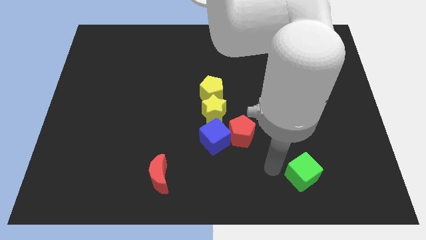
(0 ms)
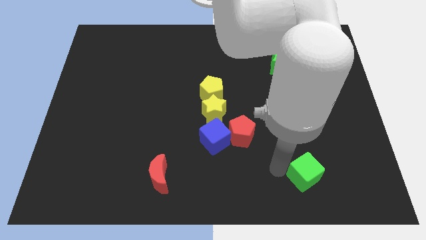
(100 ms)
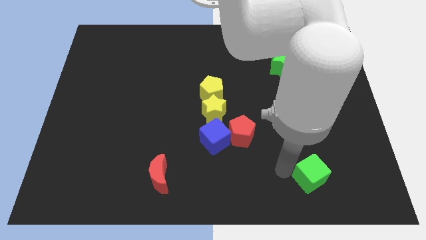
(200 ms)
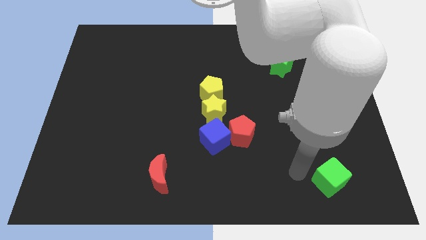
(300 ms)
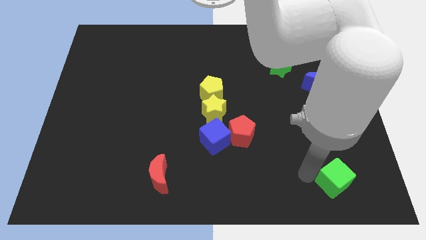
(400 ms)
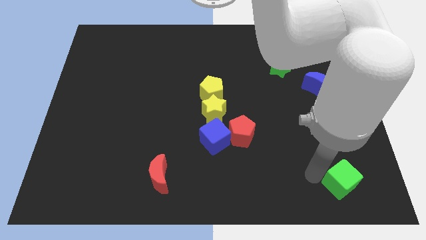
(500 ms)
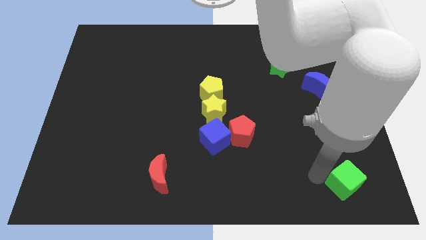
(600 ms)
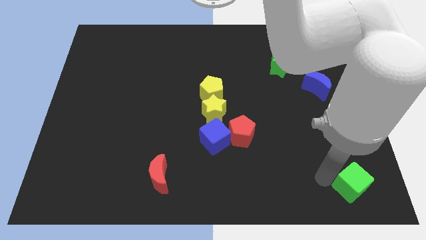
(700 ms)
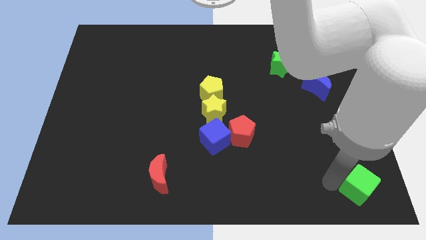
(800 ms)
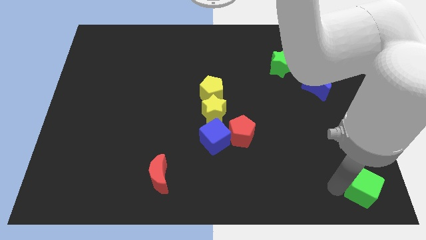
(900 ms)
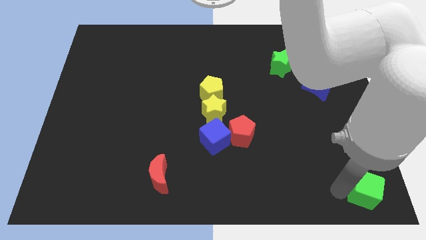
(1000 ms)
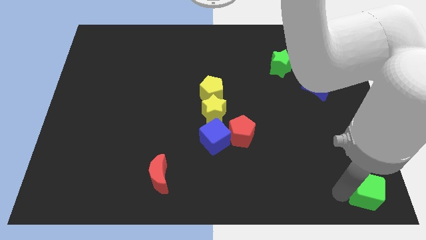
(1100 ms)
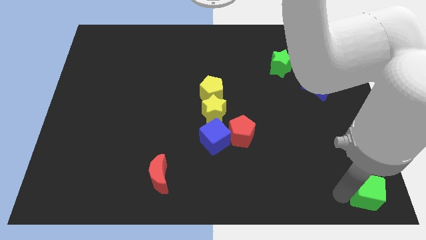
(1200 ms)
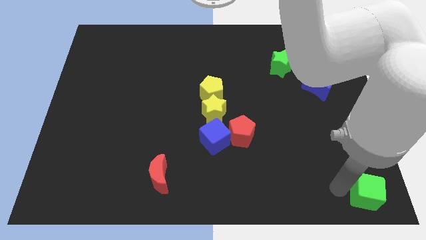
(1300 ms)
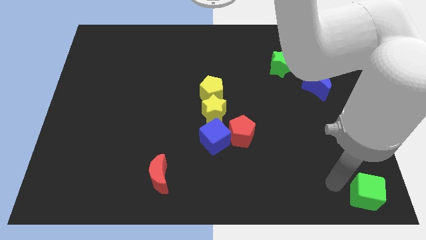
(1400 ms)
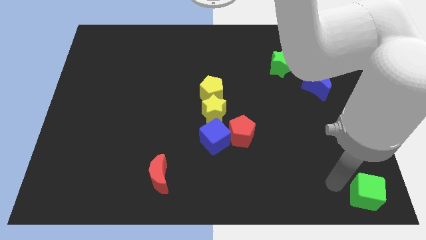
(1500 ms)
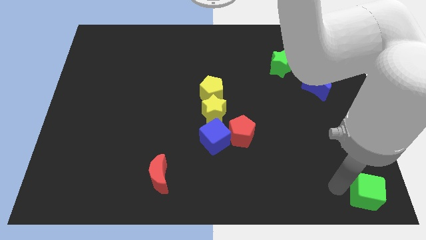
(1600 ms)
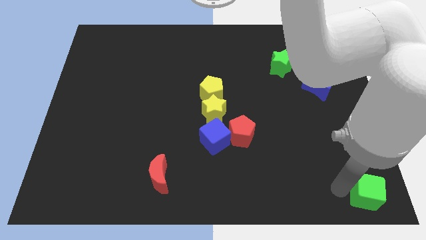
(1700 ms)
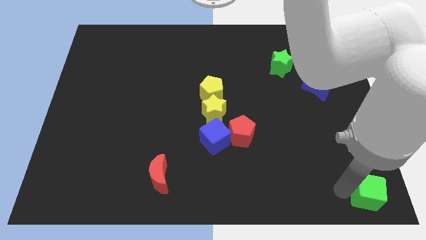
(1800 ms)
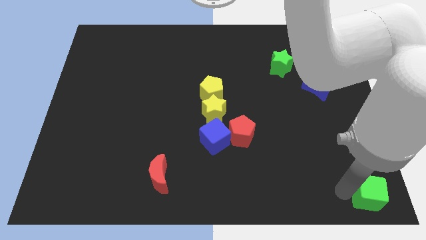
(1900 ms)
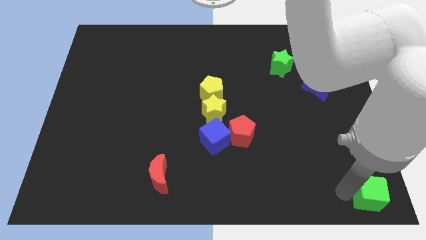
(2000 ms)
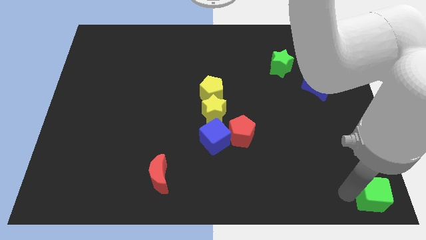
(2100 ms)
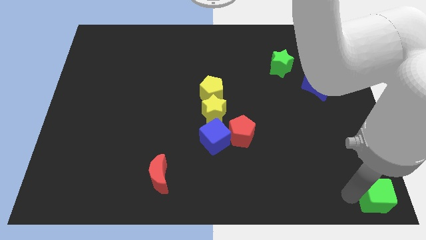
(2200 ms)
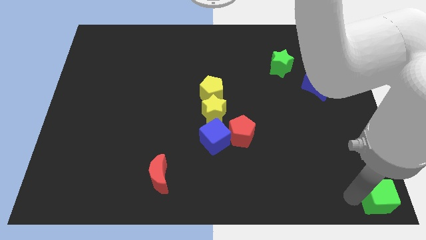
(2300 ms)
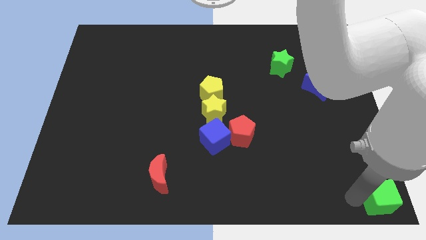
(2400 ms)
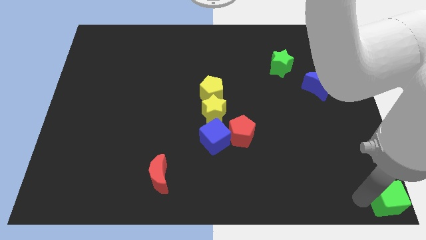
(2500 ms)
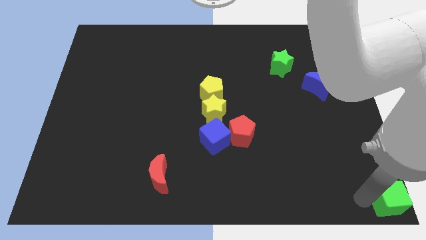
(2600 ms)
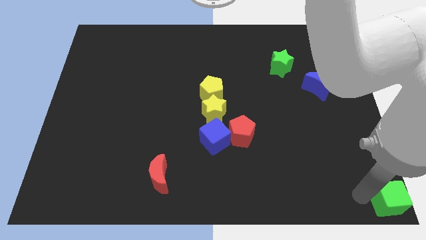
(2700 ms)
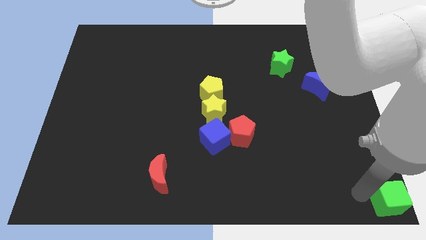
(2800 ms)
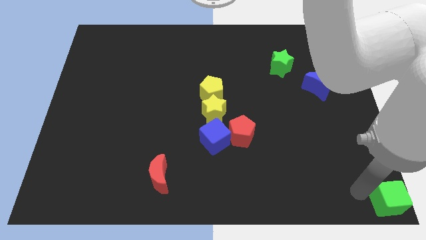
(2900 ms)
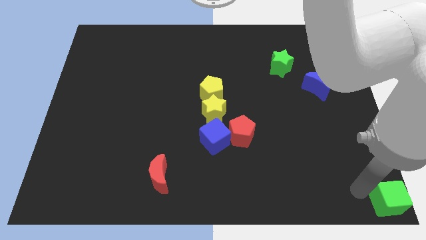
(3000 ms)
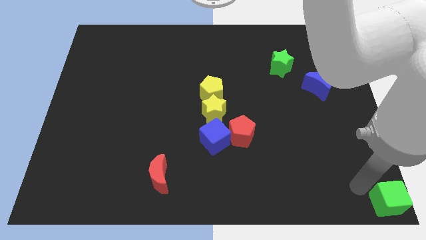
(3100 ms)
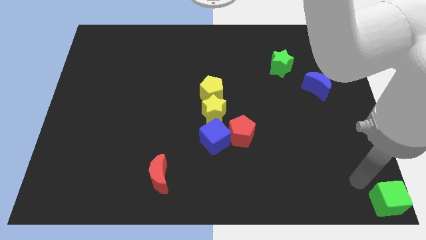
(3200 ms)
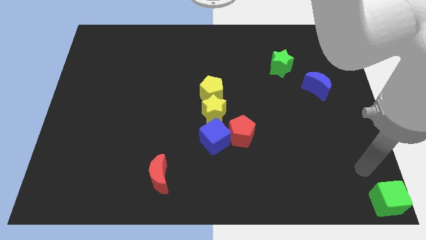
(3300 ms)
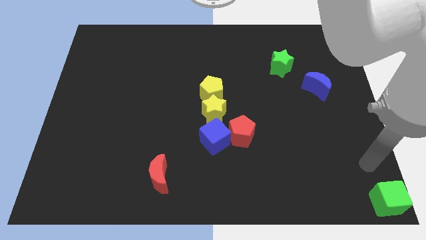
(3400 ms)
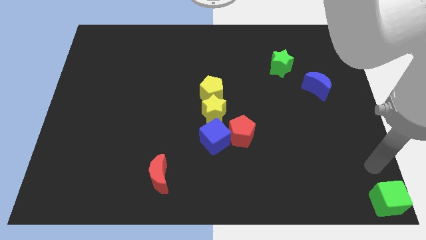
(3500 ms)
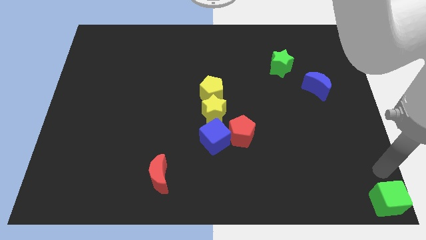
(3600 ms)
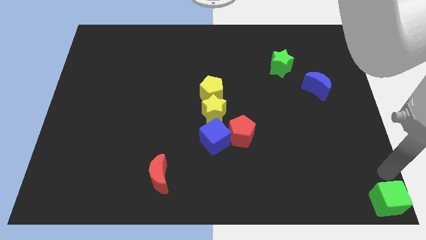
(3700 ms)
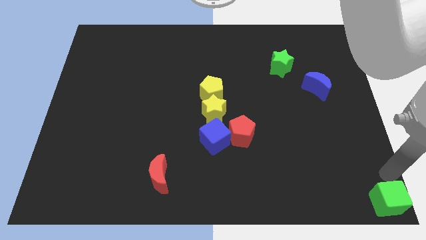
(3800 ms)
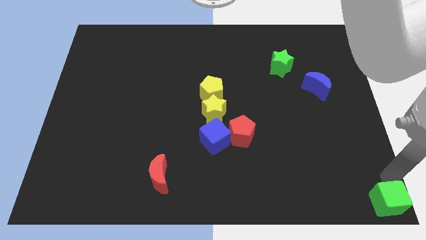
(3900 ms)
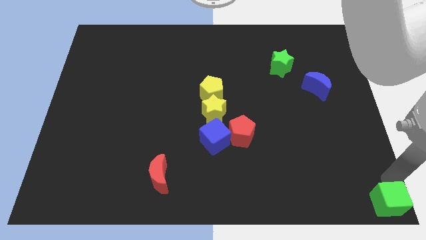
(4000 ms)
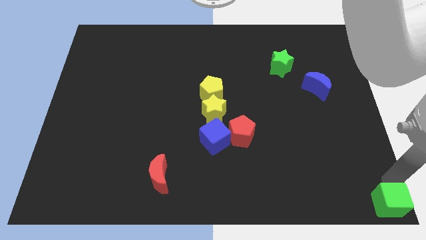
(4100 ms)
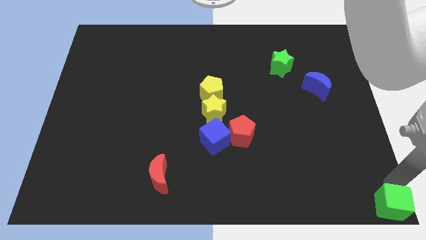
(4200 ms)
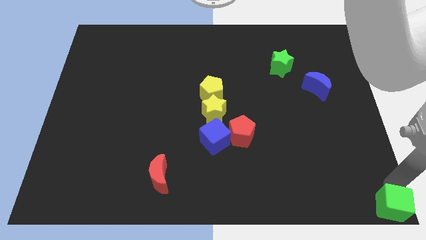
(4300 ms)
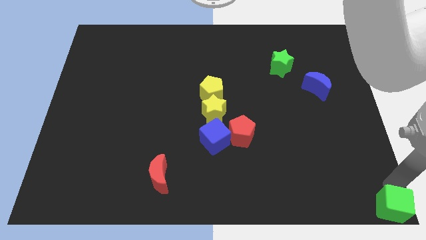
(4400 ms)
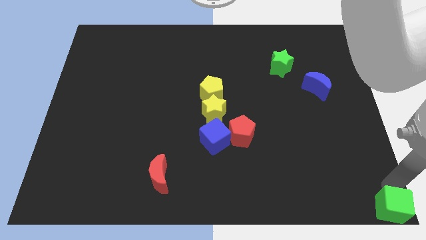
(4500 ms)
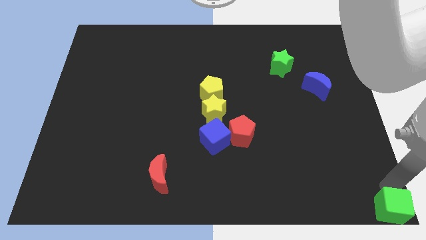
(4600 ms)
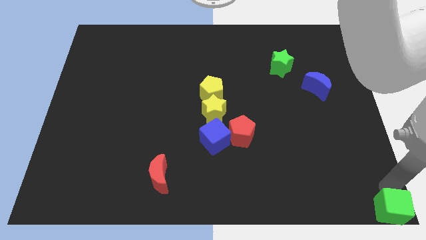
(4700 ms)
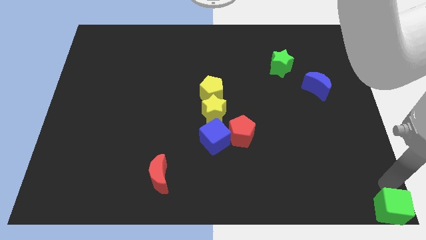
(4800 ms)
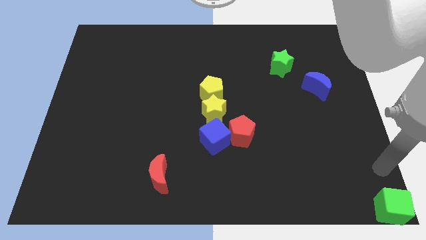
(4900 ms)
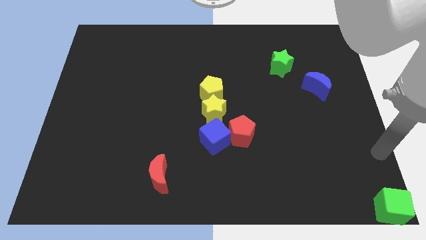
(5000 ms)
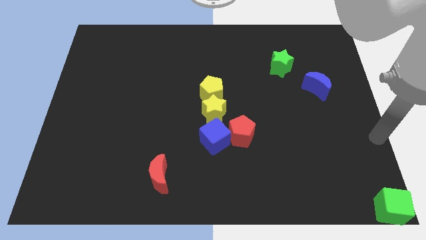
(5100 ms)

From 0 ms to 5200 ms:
push the green cube to the bottom right of the board

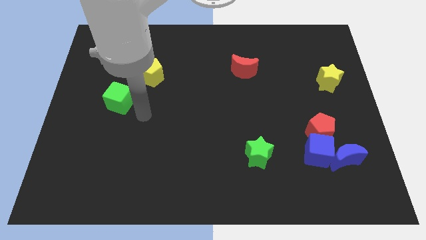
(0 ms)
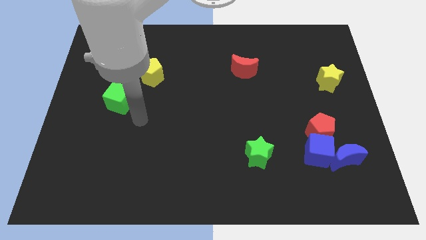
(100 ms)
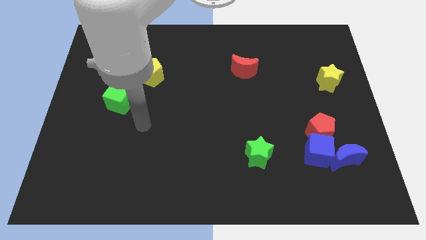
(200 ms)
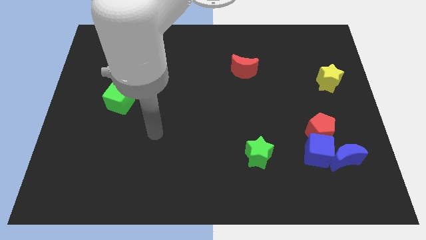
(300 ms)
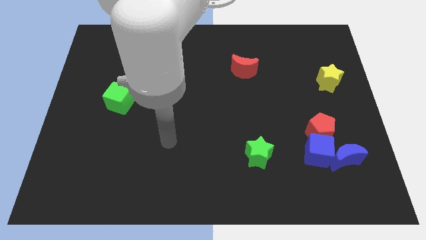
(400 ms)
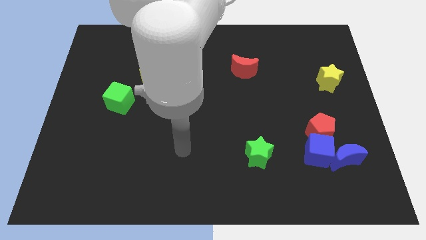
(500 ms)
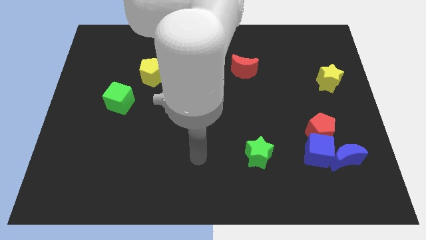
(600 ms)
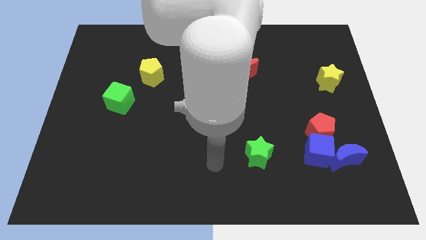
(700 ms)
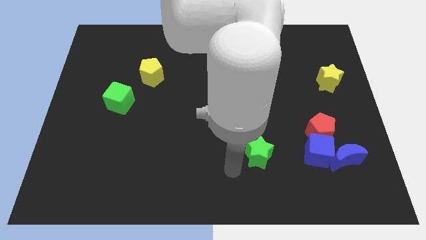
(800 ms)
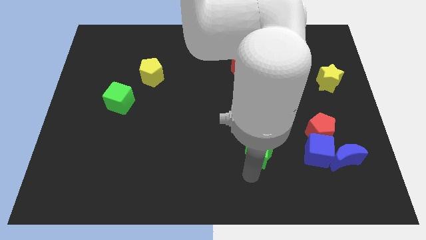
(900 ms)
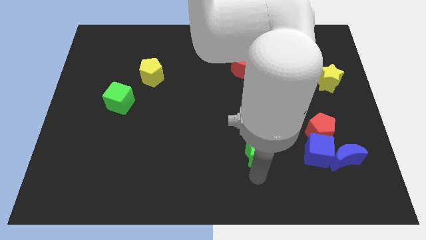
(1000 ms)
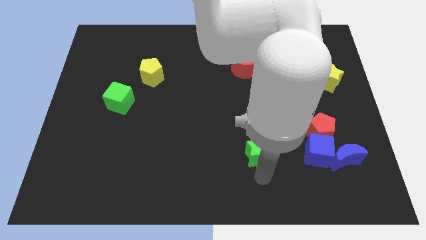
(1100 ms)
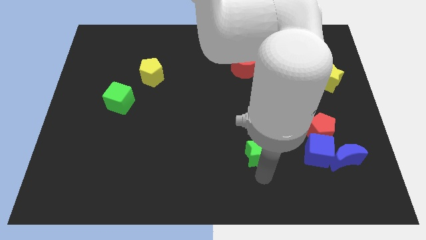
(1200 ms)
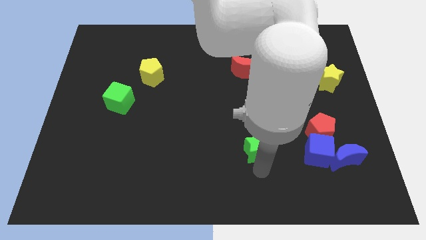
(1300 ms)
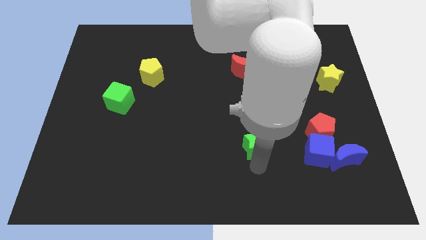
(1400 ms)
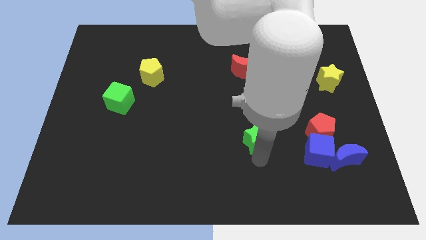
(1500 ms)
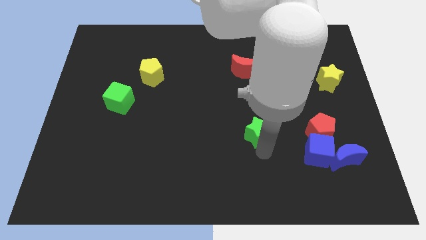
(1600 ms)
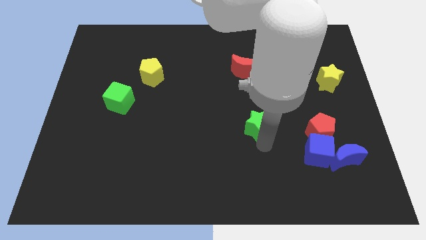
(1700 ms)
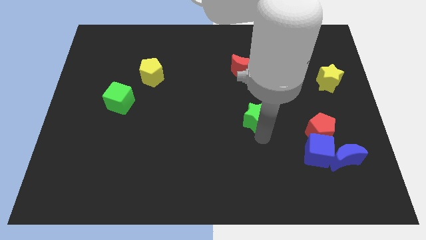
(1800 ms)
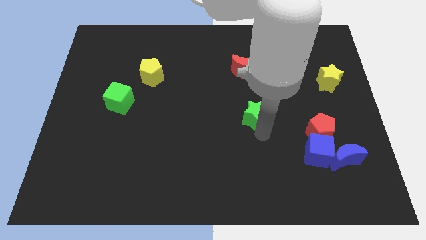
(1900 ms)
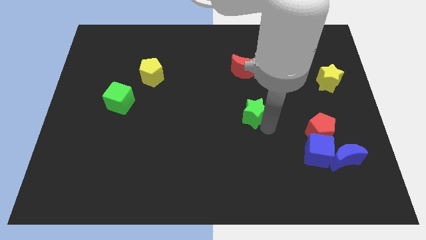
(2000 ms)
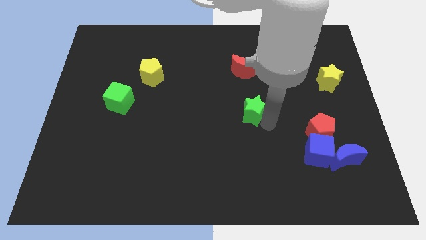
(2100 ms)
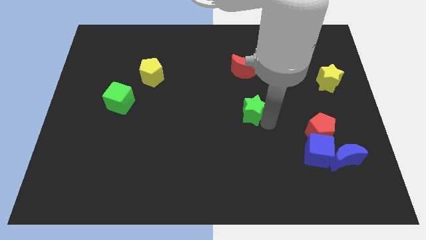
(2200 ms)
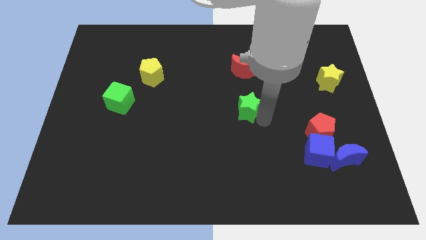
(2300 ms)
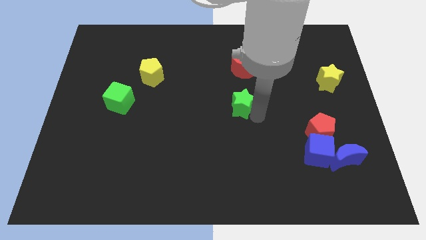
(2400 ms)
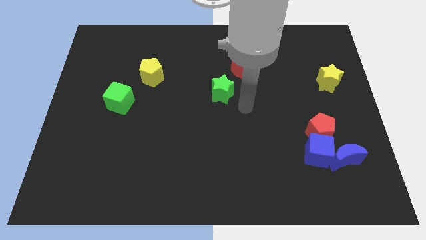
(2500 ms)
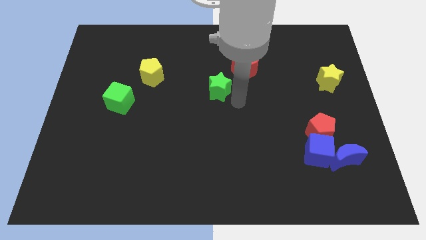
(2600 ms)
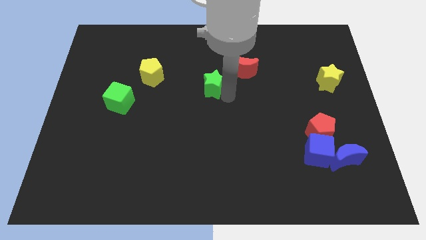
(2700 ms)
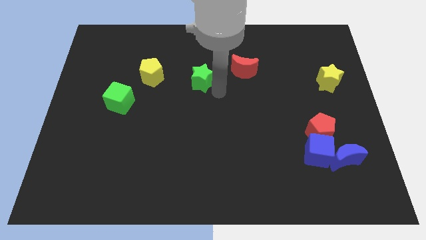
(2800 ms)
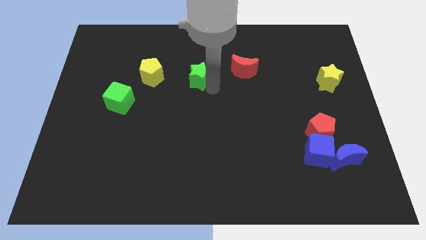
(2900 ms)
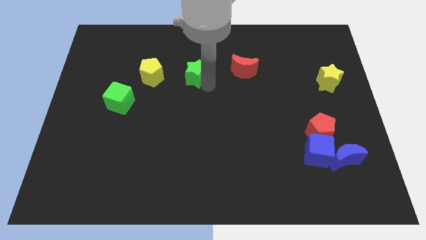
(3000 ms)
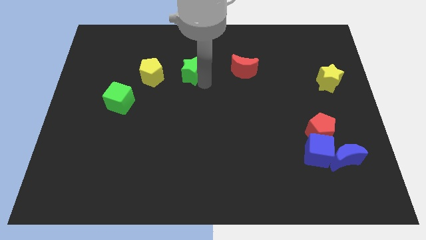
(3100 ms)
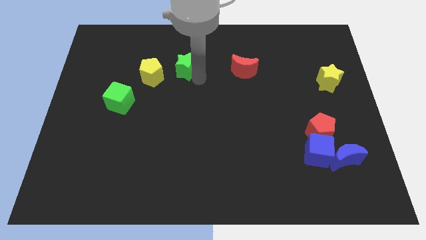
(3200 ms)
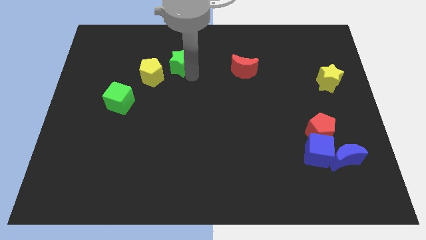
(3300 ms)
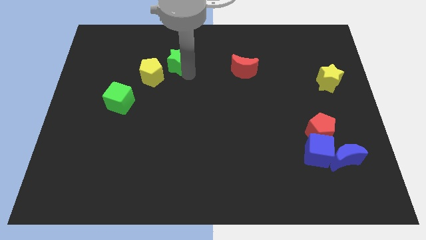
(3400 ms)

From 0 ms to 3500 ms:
move the green star to the right of the yellow pentagon

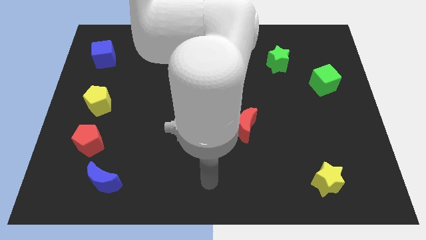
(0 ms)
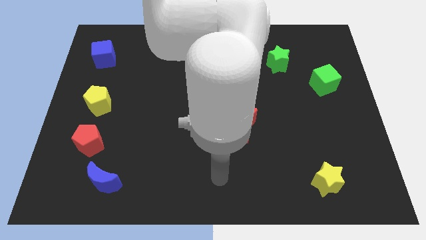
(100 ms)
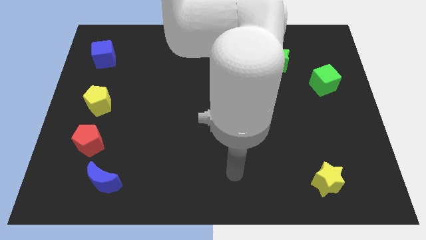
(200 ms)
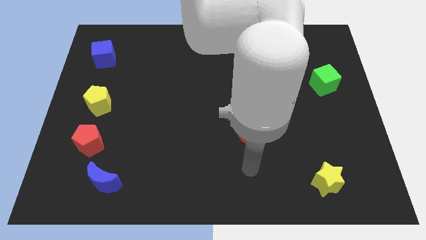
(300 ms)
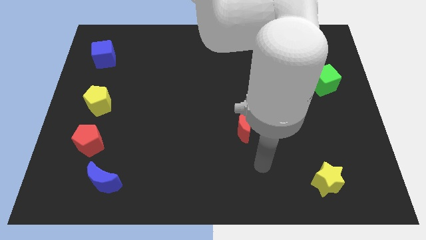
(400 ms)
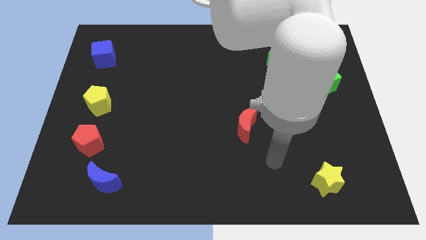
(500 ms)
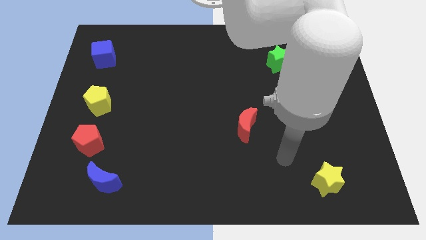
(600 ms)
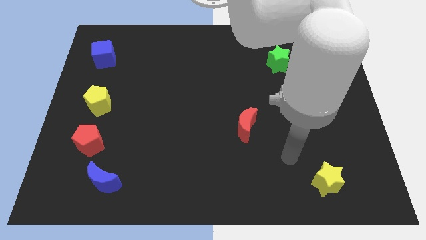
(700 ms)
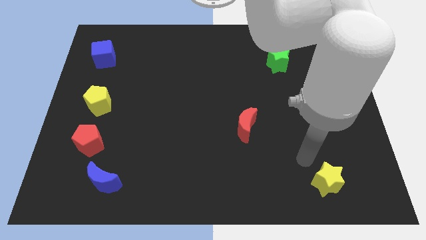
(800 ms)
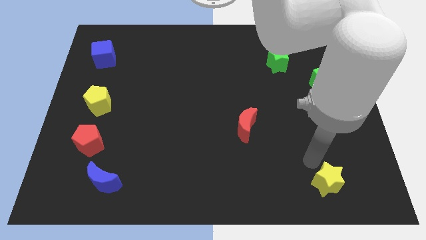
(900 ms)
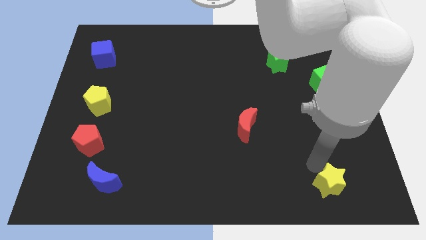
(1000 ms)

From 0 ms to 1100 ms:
move your arm to the top of yellow star
